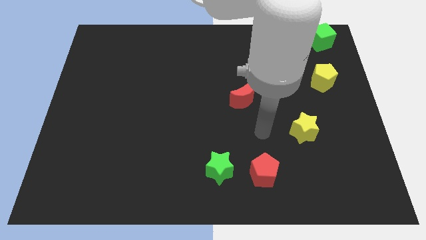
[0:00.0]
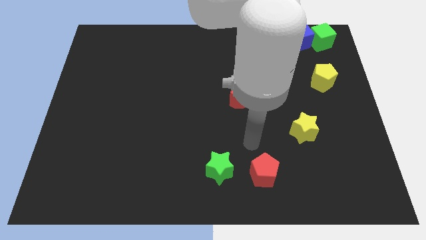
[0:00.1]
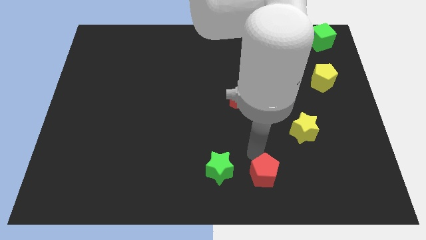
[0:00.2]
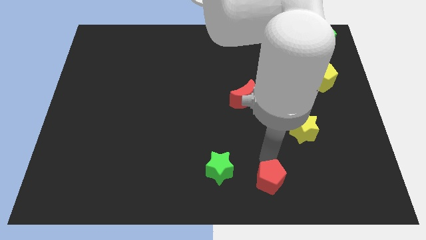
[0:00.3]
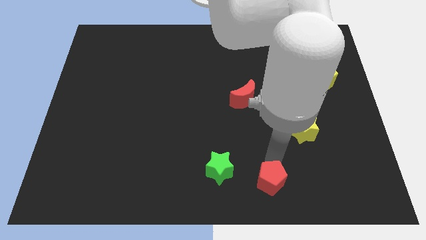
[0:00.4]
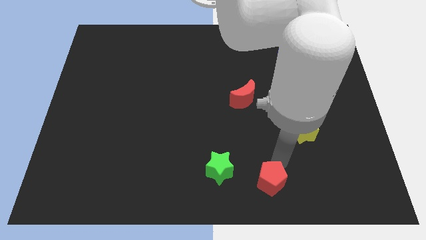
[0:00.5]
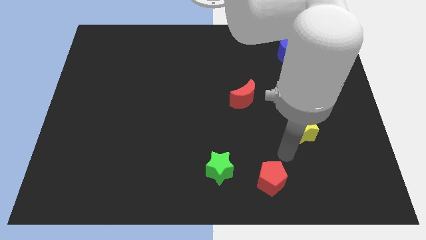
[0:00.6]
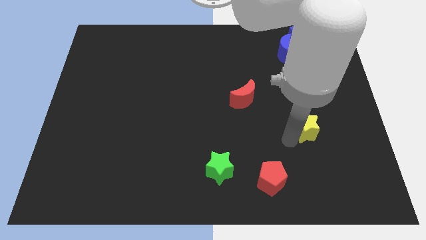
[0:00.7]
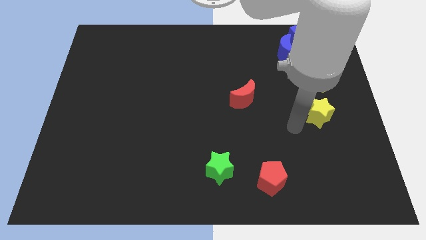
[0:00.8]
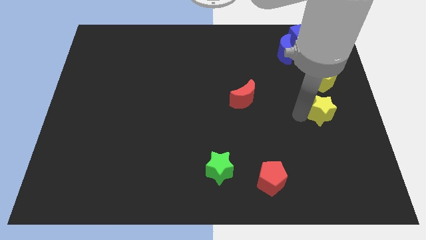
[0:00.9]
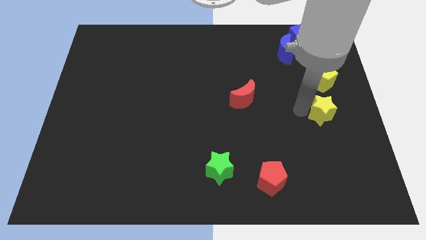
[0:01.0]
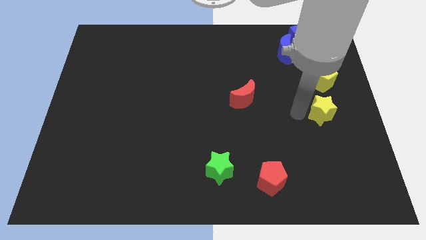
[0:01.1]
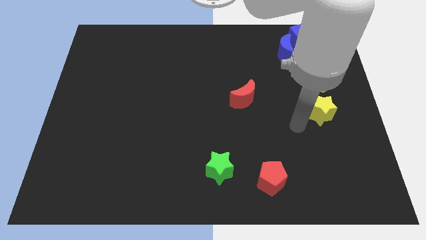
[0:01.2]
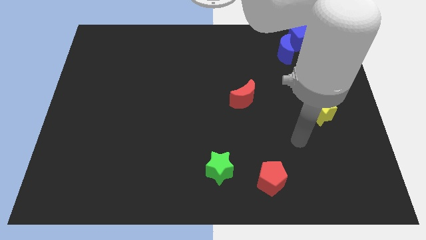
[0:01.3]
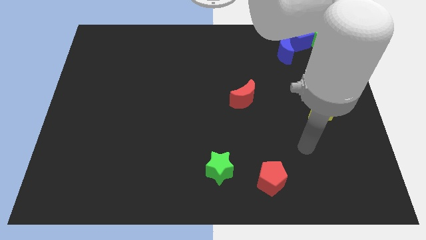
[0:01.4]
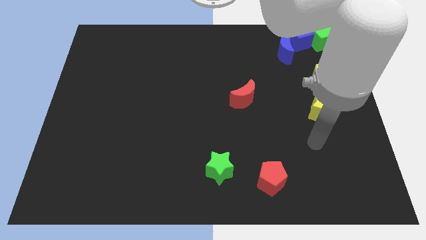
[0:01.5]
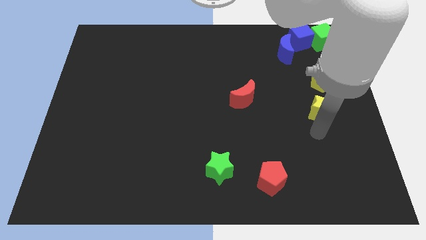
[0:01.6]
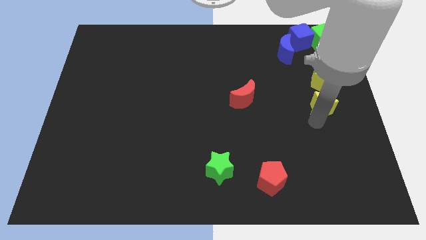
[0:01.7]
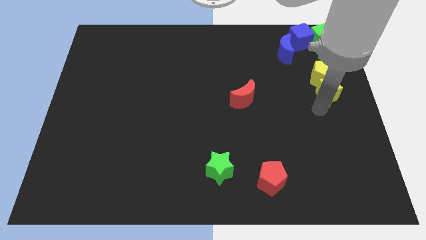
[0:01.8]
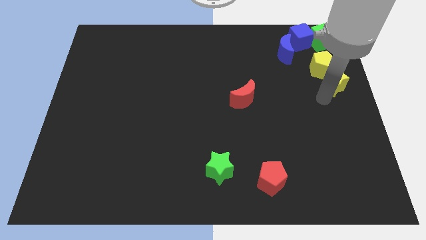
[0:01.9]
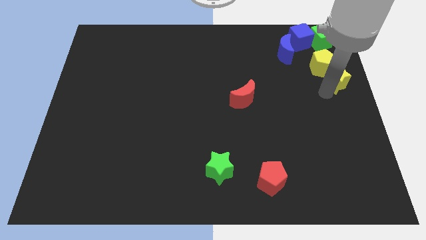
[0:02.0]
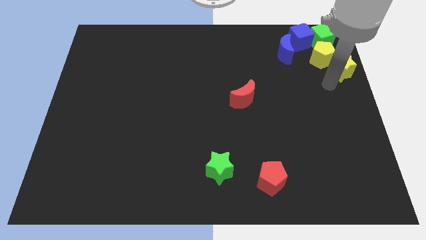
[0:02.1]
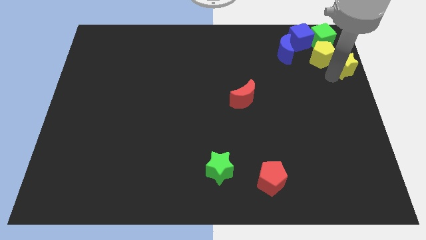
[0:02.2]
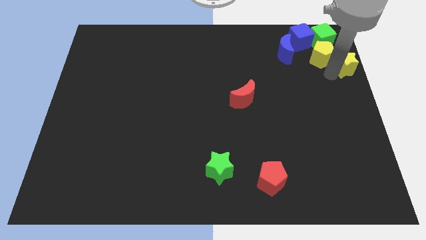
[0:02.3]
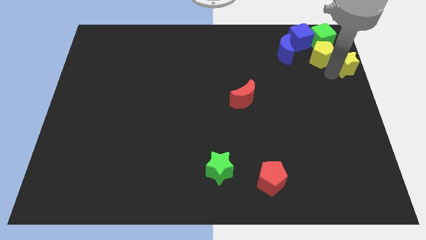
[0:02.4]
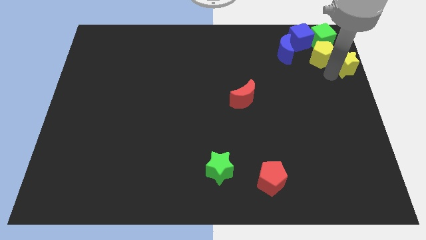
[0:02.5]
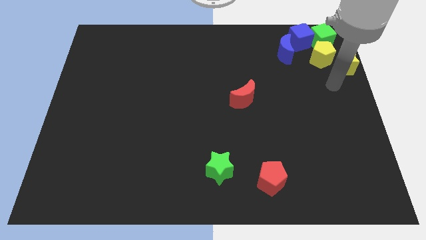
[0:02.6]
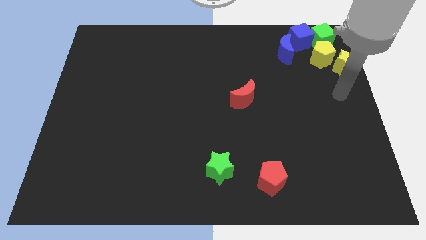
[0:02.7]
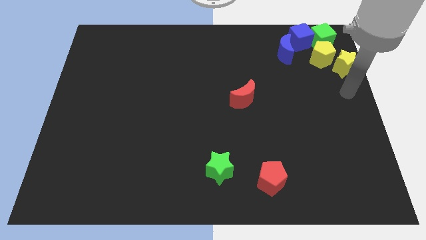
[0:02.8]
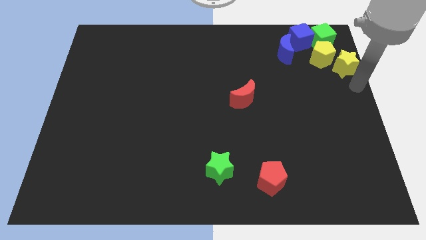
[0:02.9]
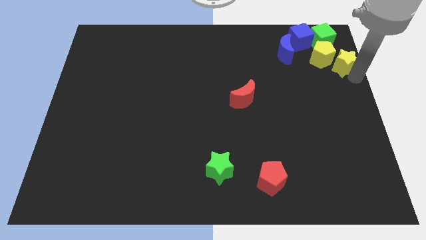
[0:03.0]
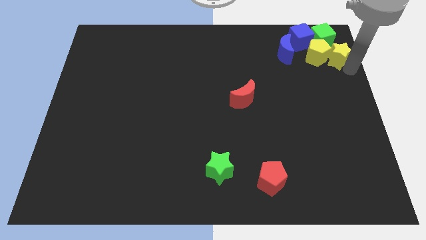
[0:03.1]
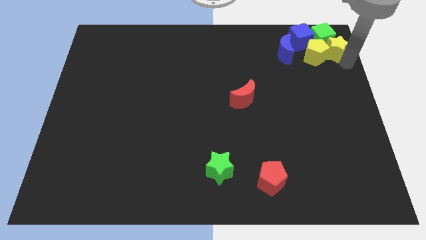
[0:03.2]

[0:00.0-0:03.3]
make a group of yellow blocks blue blocks and green cube

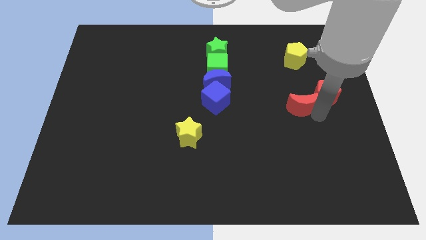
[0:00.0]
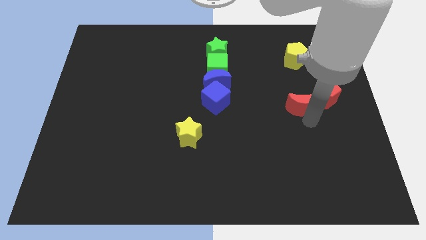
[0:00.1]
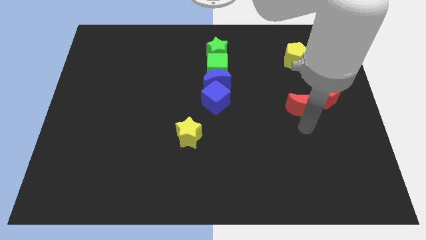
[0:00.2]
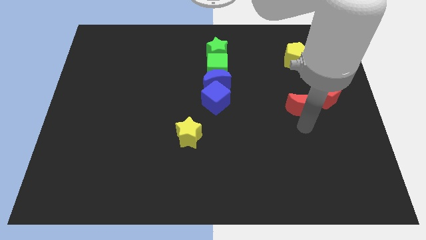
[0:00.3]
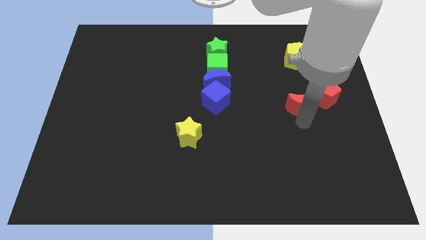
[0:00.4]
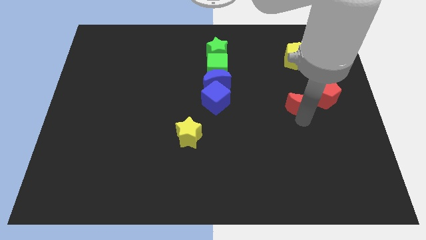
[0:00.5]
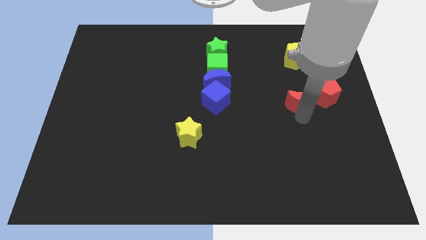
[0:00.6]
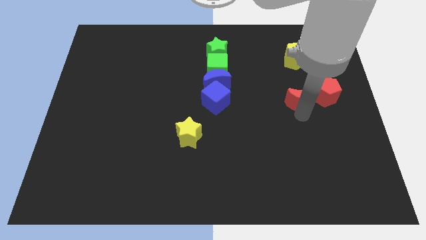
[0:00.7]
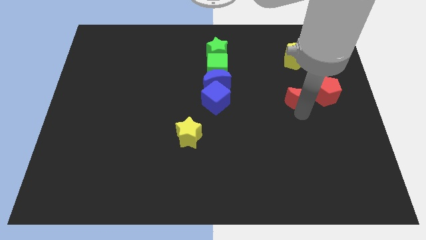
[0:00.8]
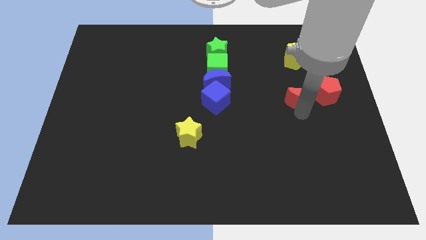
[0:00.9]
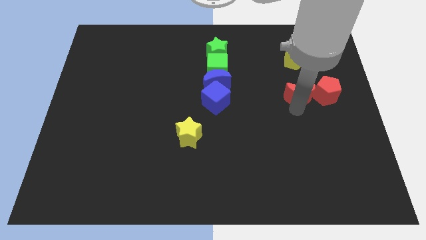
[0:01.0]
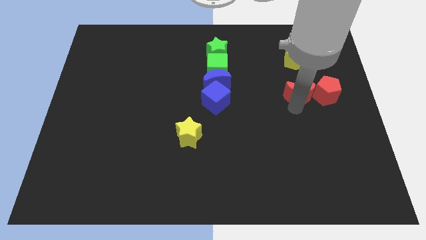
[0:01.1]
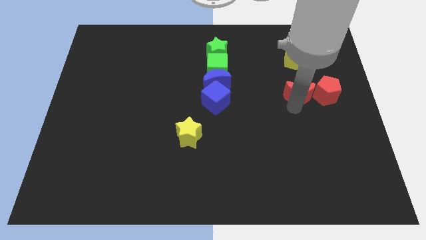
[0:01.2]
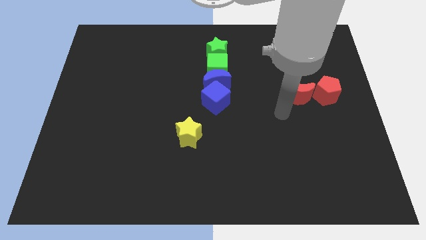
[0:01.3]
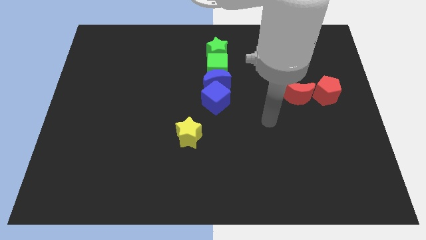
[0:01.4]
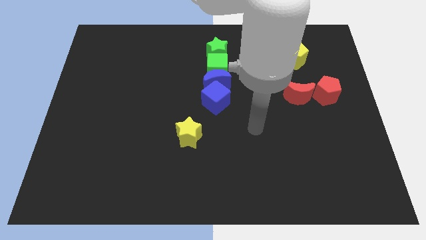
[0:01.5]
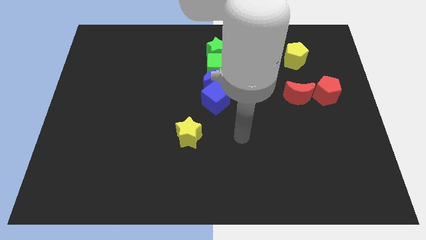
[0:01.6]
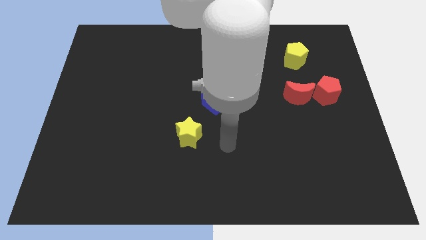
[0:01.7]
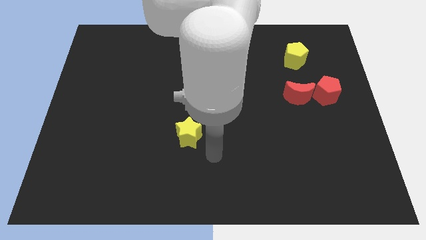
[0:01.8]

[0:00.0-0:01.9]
slightly move the red moon towards the yellow pentagon

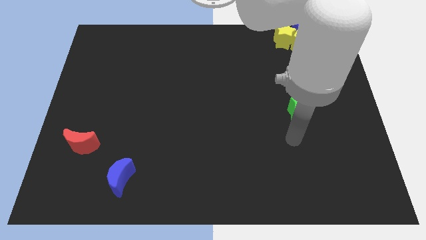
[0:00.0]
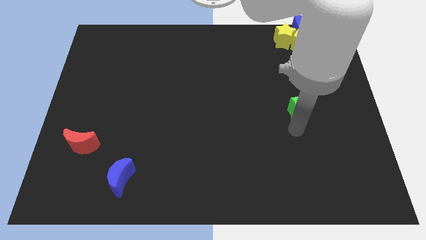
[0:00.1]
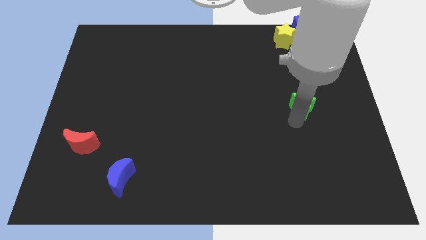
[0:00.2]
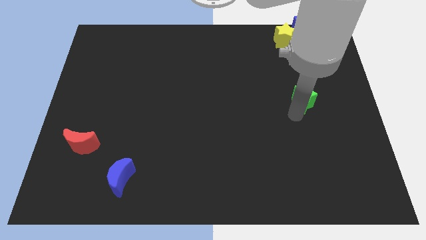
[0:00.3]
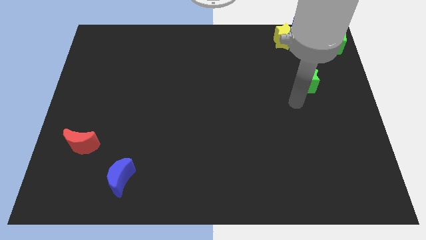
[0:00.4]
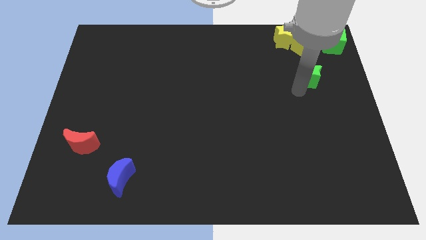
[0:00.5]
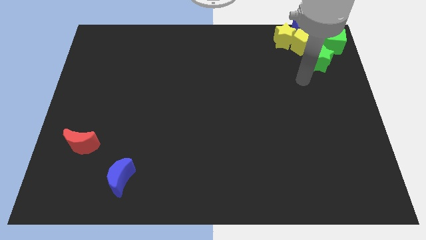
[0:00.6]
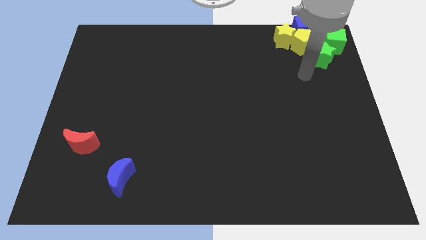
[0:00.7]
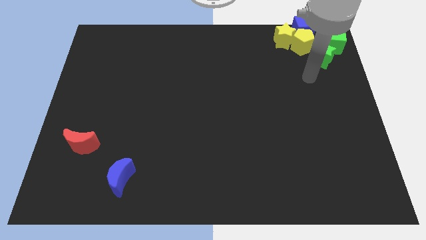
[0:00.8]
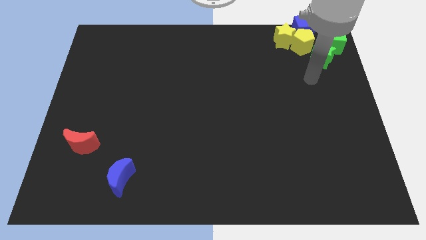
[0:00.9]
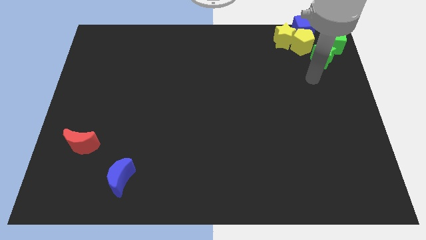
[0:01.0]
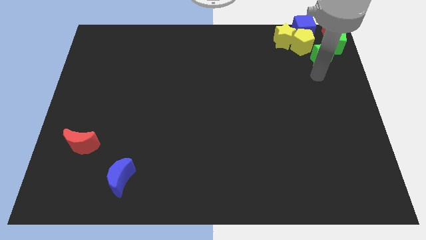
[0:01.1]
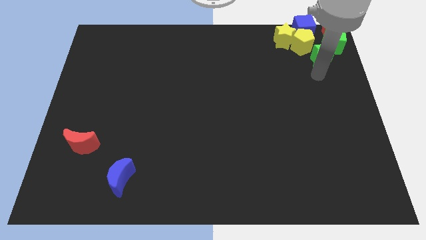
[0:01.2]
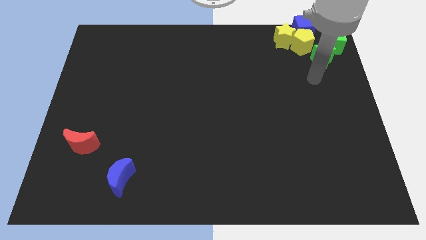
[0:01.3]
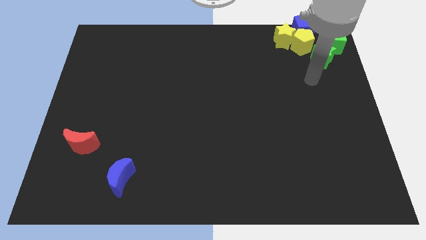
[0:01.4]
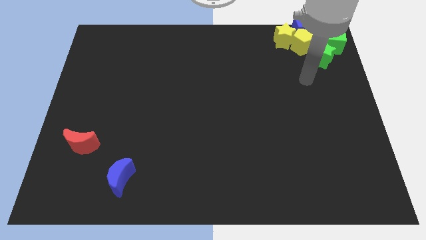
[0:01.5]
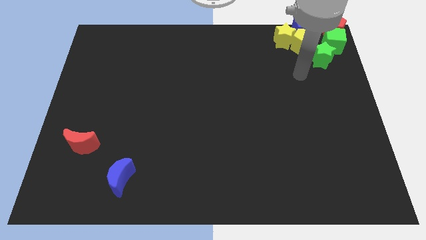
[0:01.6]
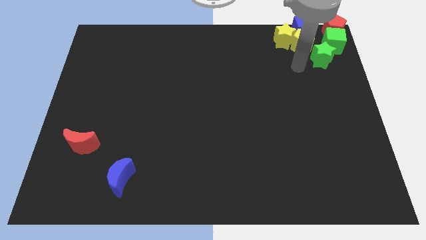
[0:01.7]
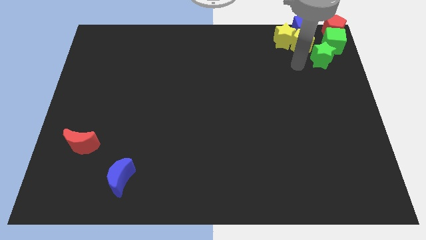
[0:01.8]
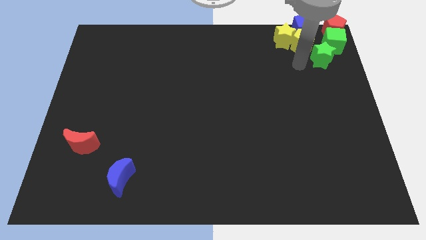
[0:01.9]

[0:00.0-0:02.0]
slide green star to the bottom of the green cube

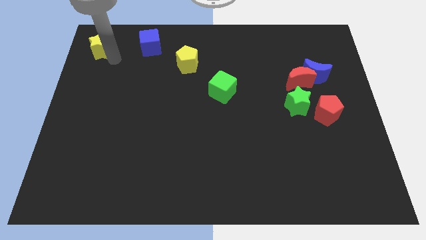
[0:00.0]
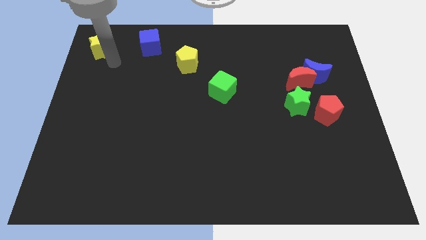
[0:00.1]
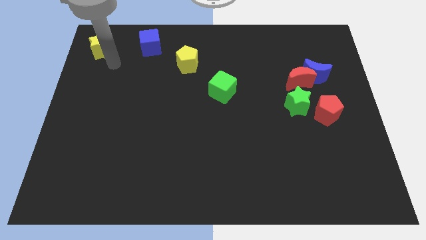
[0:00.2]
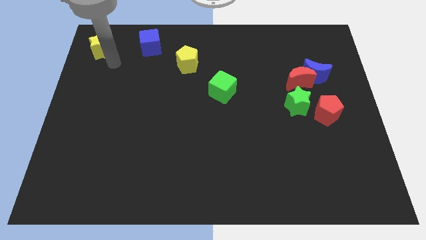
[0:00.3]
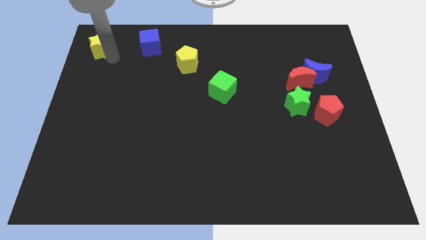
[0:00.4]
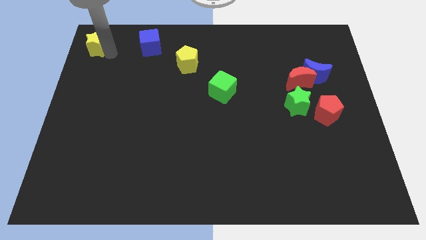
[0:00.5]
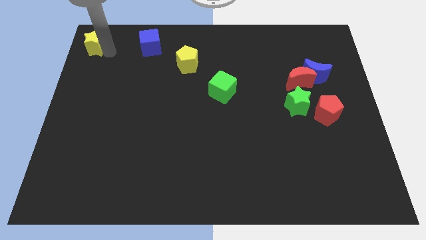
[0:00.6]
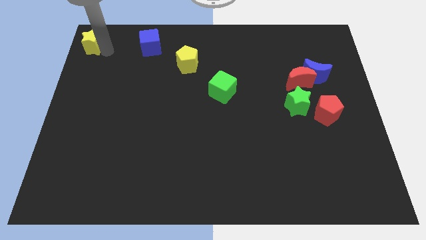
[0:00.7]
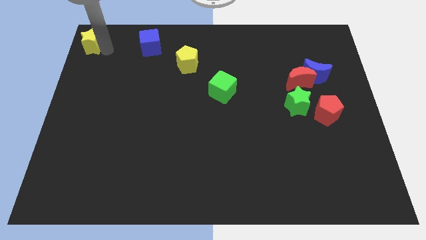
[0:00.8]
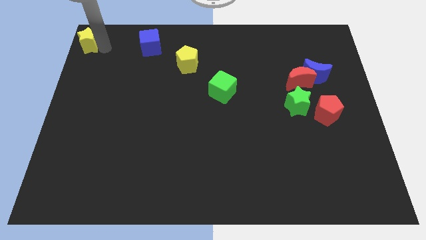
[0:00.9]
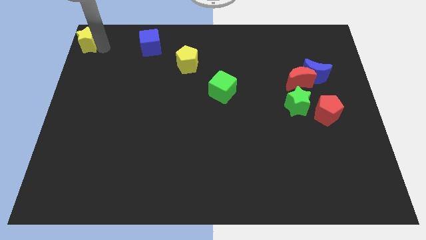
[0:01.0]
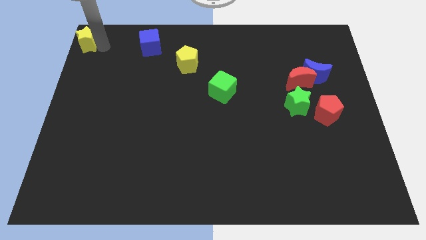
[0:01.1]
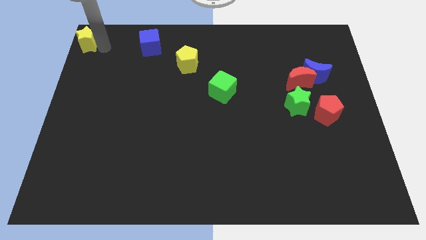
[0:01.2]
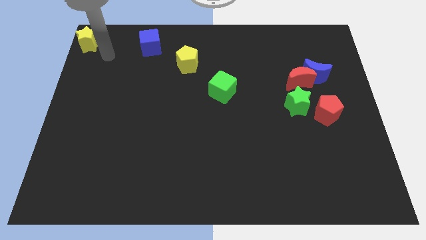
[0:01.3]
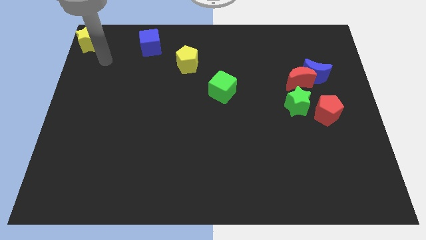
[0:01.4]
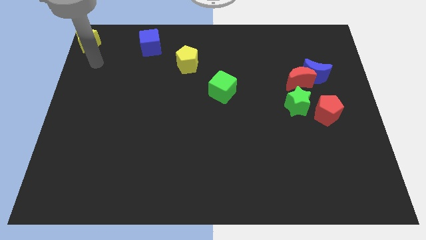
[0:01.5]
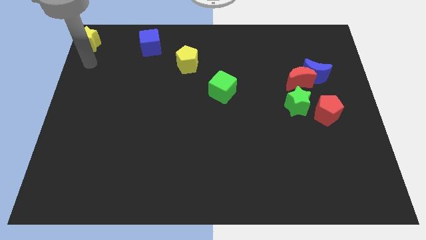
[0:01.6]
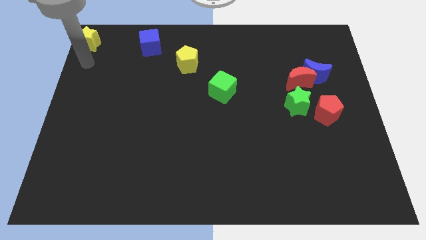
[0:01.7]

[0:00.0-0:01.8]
place the yellow star at the top left corner of the board
